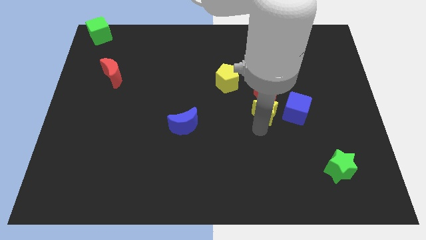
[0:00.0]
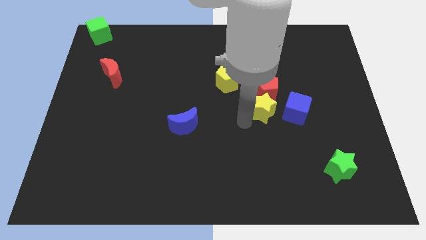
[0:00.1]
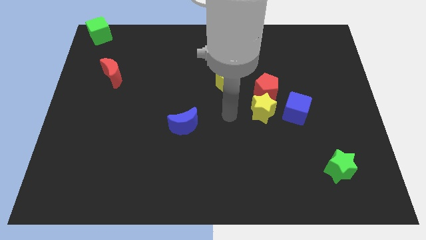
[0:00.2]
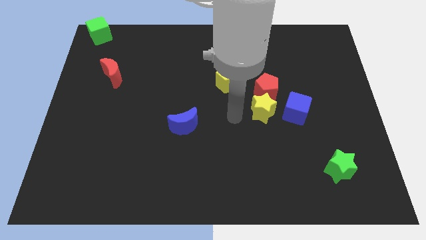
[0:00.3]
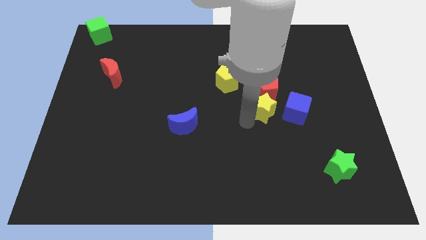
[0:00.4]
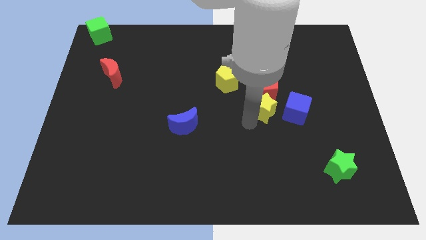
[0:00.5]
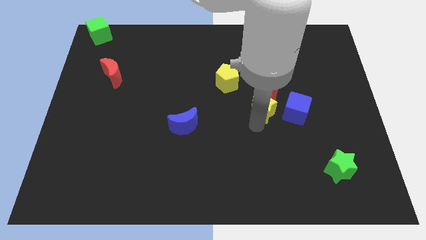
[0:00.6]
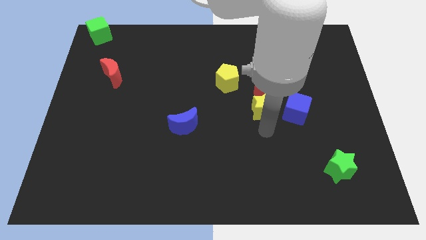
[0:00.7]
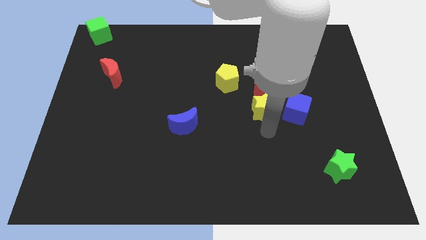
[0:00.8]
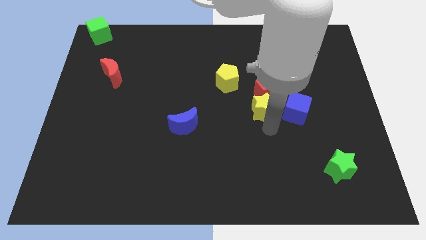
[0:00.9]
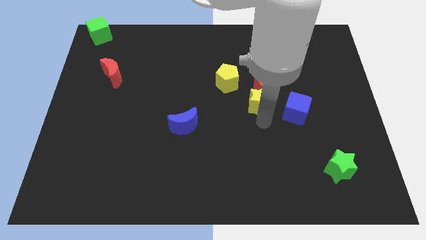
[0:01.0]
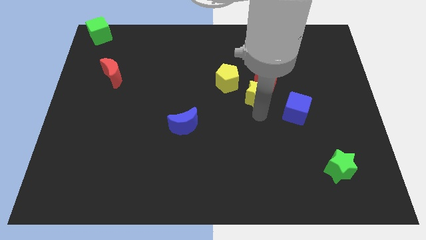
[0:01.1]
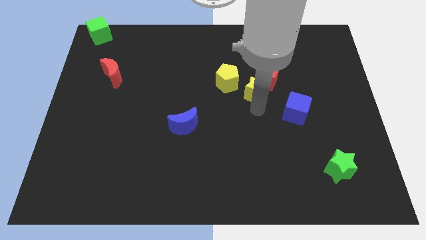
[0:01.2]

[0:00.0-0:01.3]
push the yellow star into the red pentagon

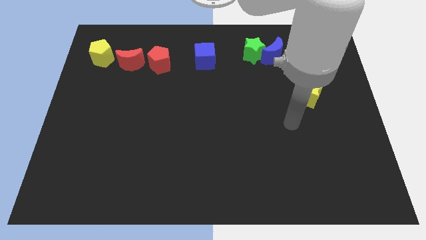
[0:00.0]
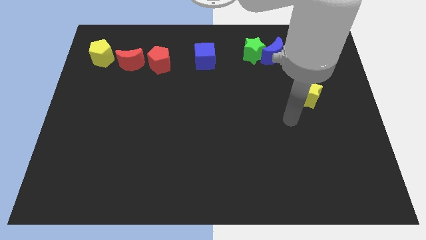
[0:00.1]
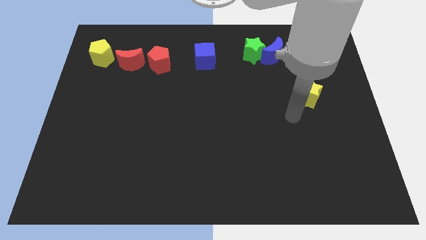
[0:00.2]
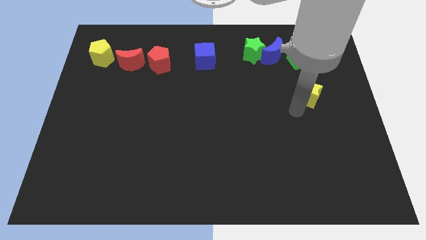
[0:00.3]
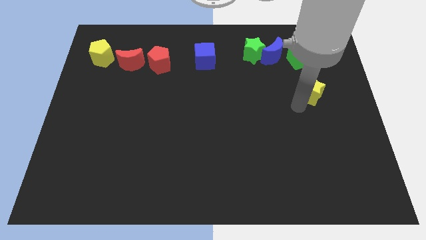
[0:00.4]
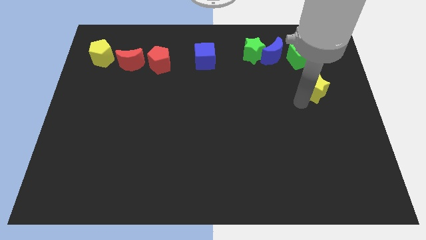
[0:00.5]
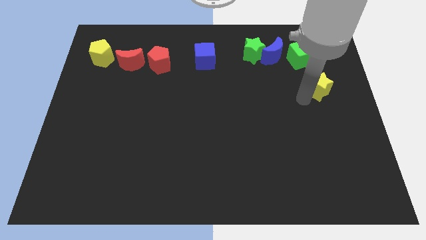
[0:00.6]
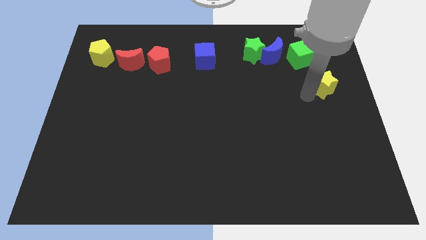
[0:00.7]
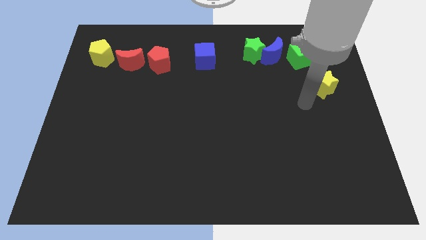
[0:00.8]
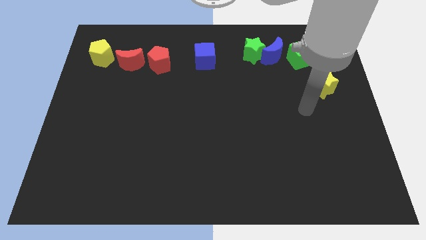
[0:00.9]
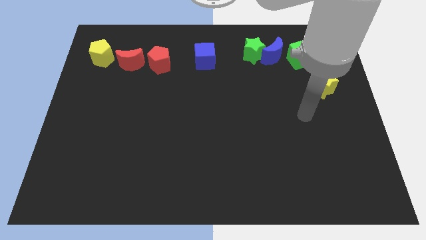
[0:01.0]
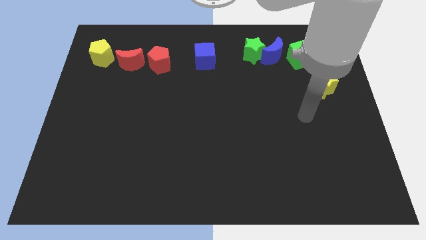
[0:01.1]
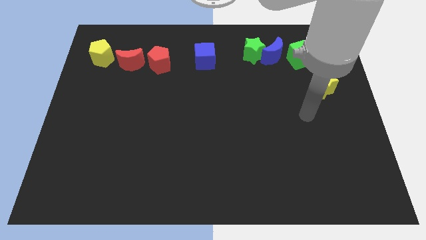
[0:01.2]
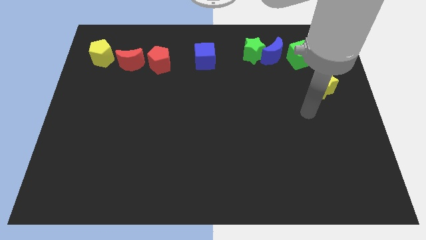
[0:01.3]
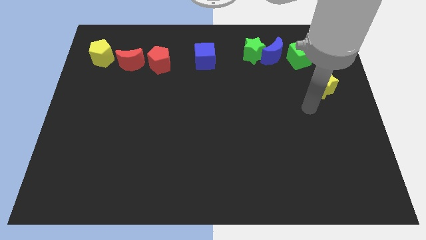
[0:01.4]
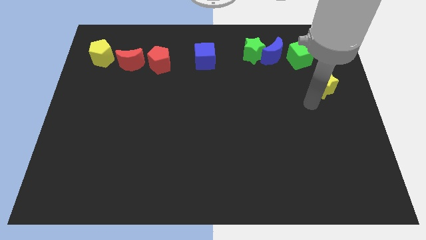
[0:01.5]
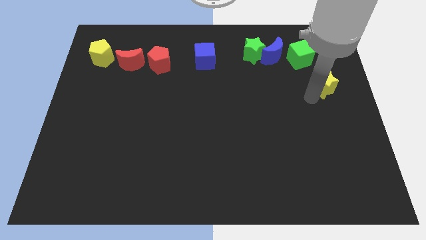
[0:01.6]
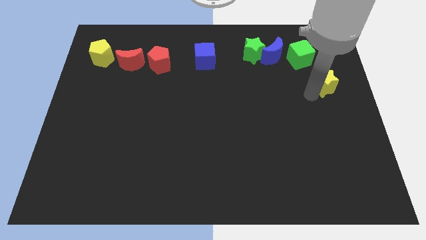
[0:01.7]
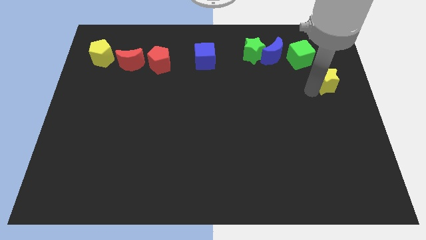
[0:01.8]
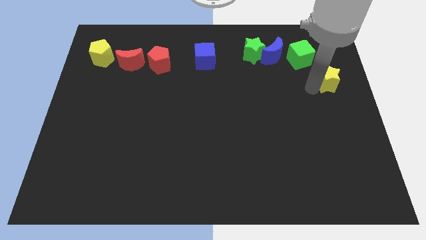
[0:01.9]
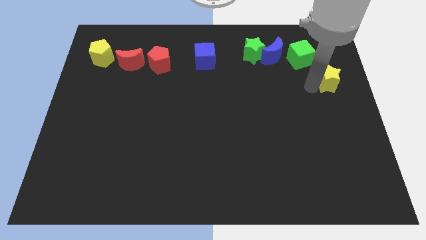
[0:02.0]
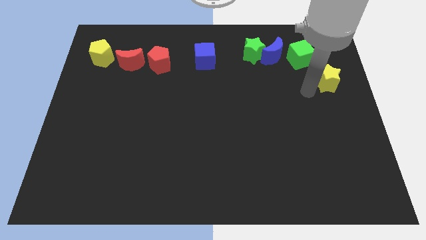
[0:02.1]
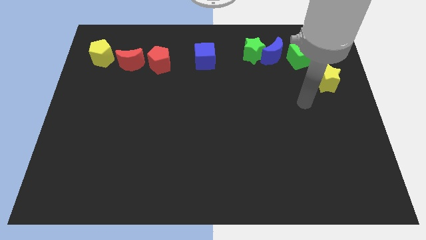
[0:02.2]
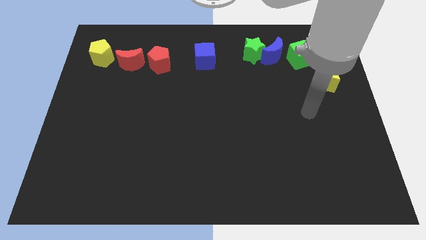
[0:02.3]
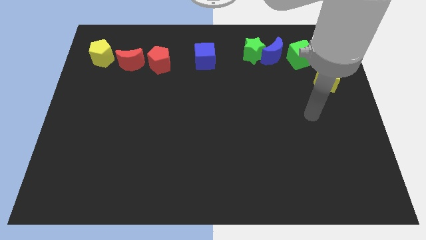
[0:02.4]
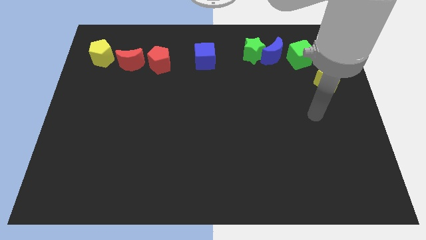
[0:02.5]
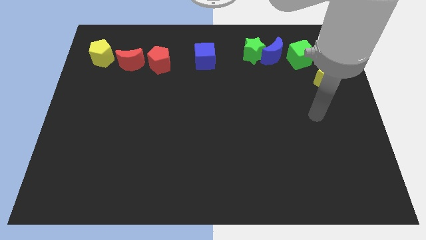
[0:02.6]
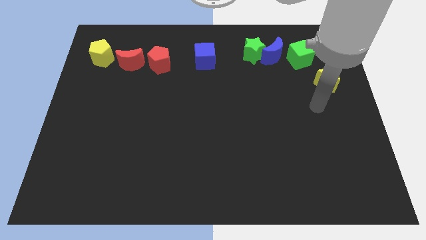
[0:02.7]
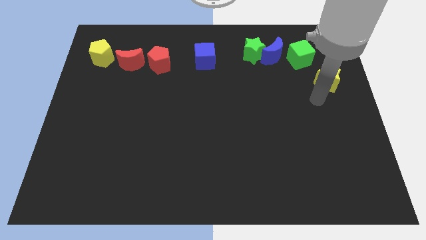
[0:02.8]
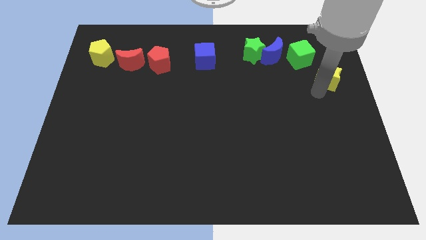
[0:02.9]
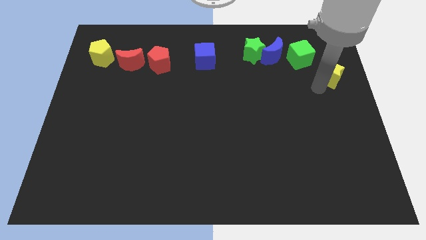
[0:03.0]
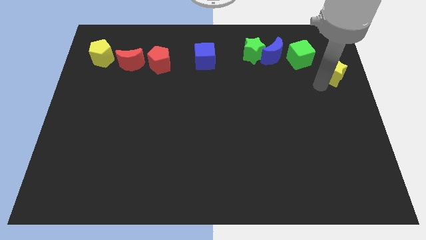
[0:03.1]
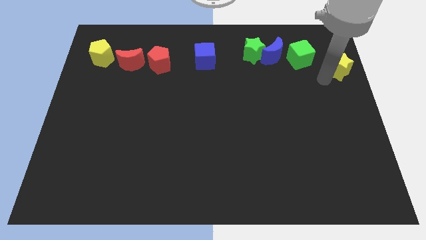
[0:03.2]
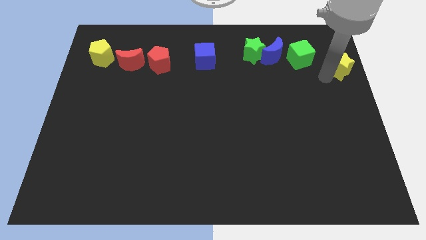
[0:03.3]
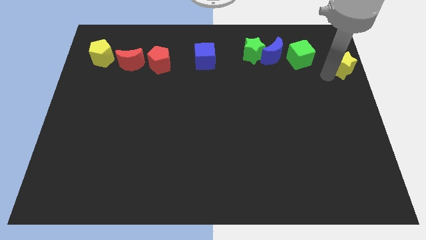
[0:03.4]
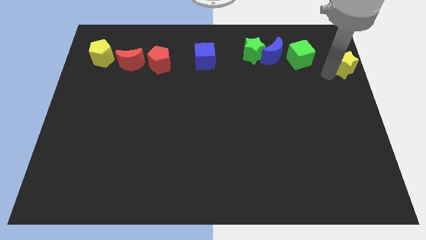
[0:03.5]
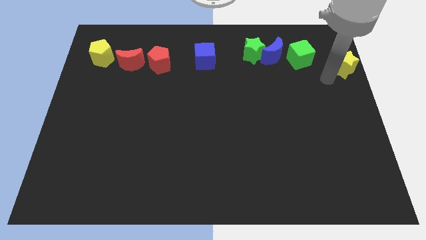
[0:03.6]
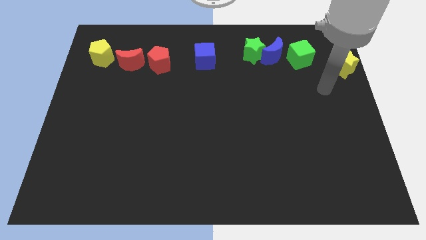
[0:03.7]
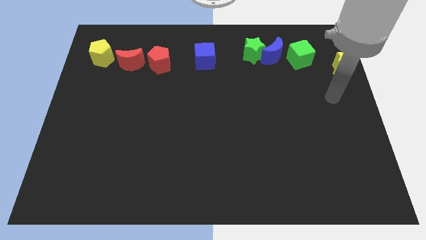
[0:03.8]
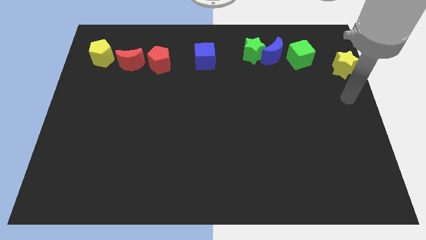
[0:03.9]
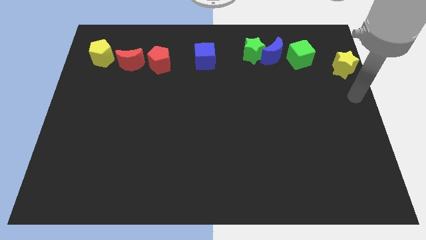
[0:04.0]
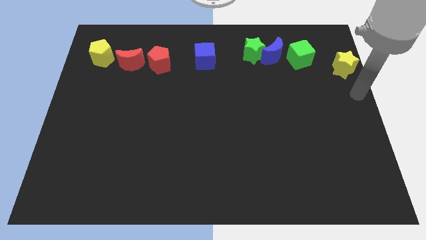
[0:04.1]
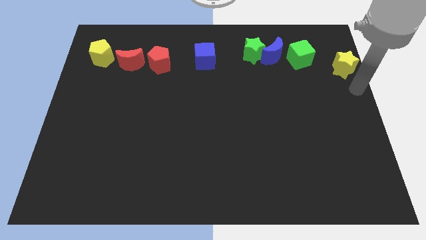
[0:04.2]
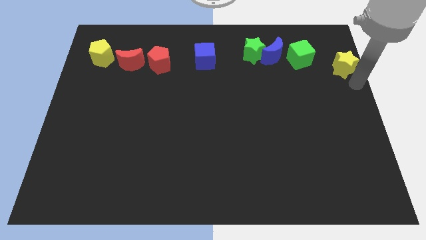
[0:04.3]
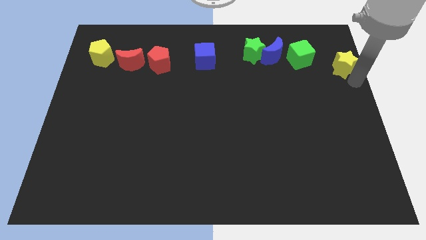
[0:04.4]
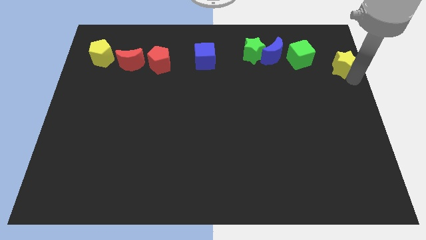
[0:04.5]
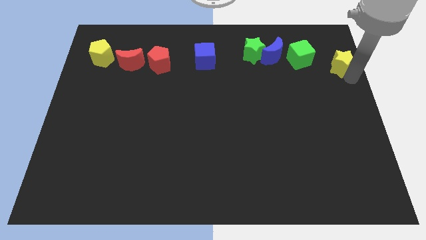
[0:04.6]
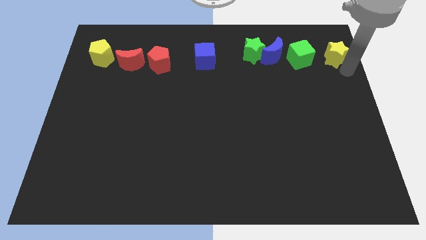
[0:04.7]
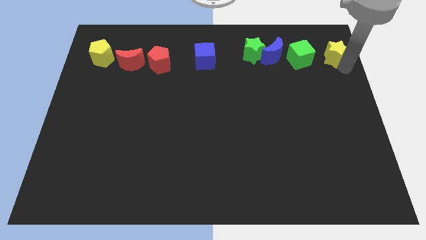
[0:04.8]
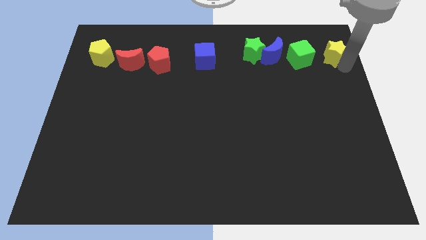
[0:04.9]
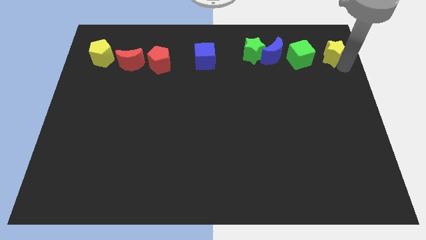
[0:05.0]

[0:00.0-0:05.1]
place yellow star to right of green cube

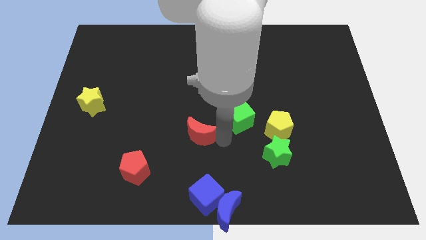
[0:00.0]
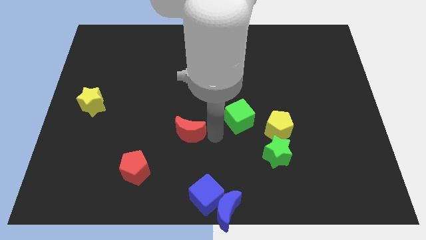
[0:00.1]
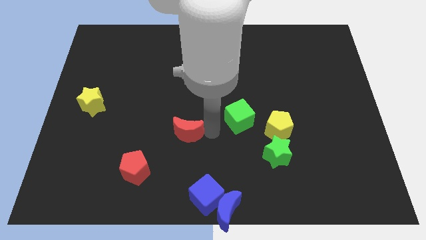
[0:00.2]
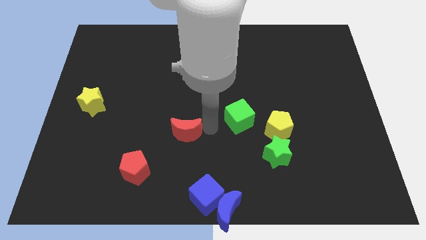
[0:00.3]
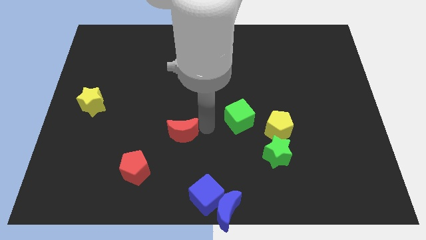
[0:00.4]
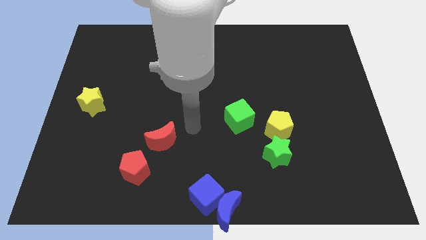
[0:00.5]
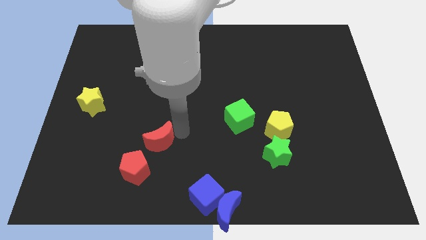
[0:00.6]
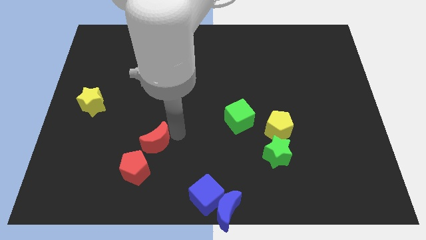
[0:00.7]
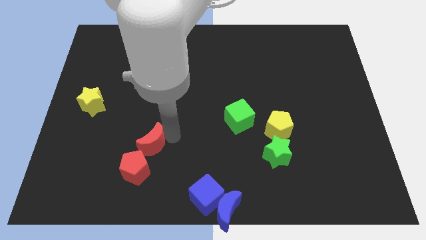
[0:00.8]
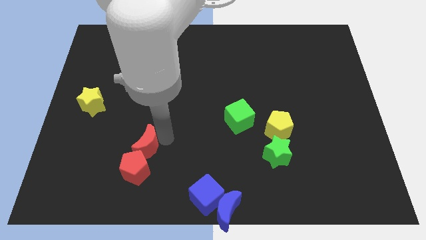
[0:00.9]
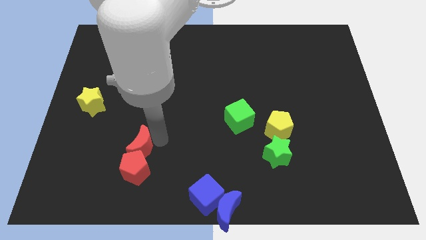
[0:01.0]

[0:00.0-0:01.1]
slide red moon on top of red pentagon

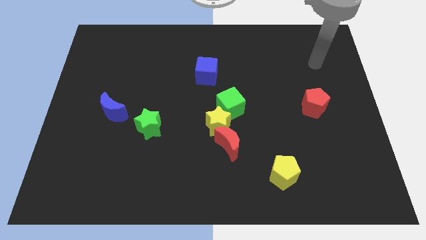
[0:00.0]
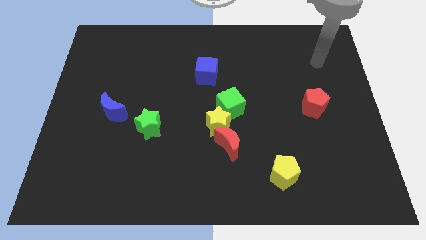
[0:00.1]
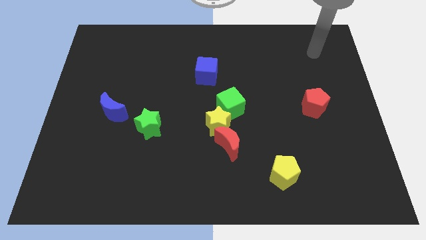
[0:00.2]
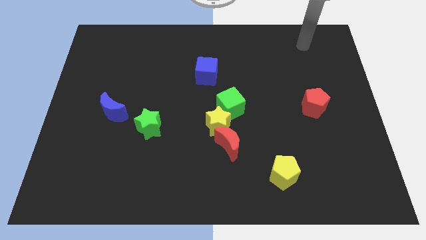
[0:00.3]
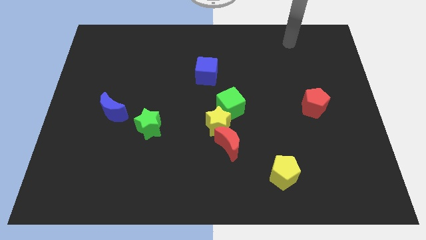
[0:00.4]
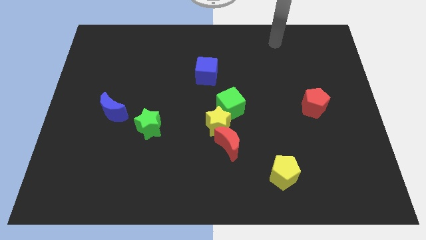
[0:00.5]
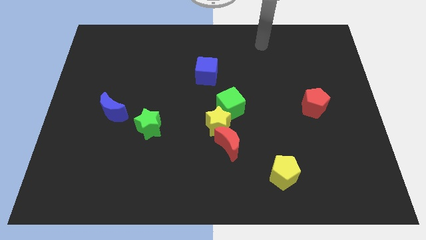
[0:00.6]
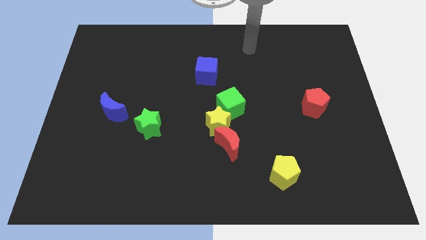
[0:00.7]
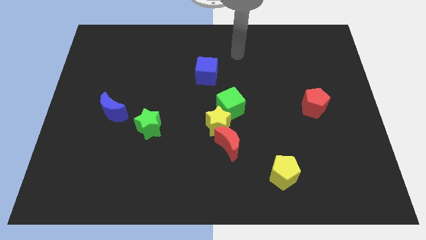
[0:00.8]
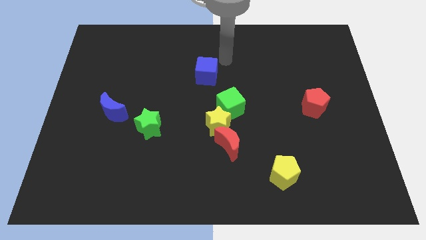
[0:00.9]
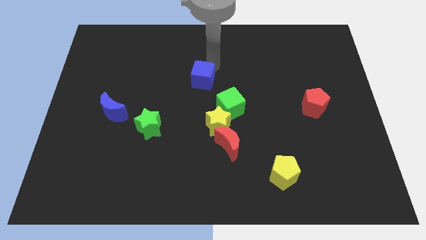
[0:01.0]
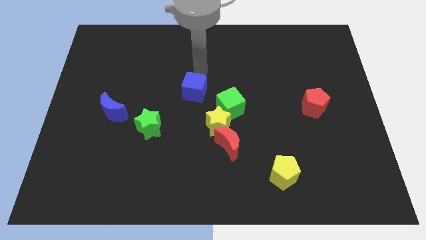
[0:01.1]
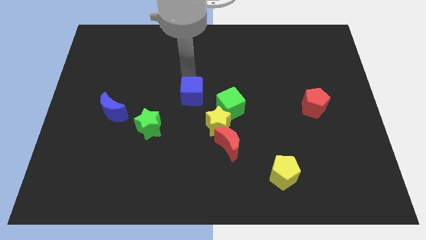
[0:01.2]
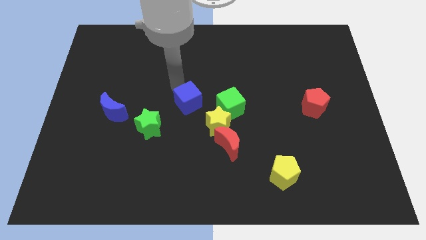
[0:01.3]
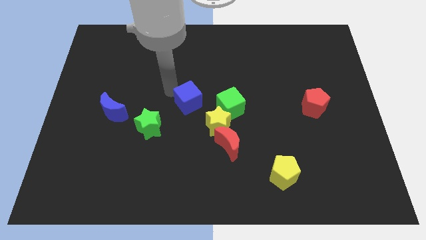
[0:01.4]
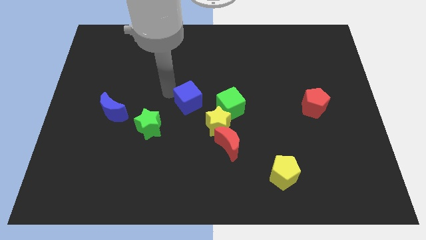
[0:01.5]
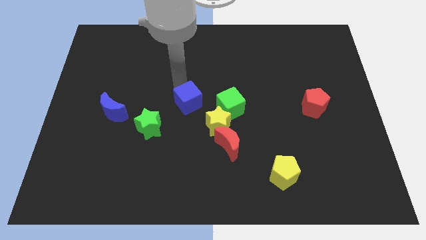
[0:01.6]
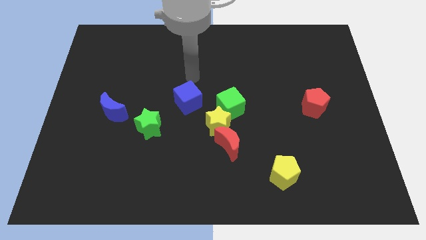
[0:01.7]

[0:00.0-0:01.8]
push the blue cube towards the green star
